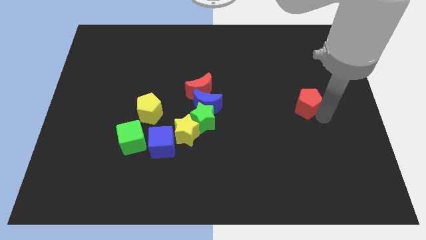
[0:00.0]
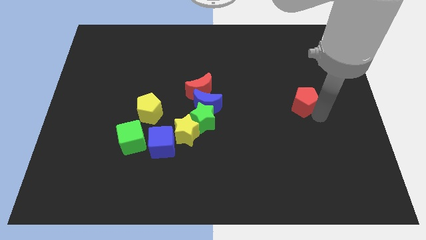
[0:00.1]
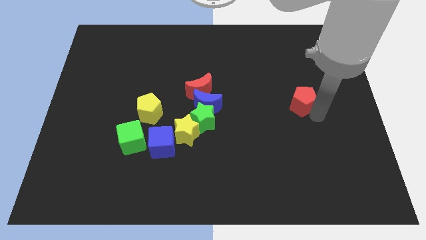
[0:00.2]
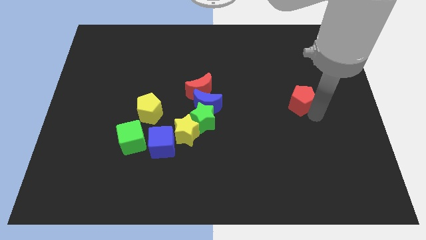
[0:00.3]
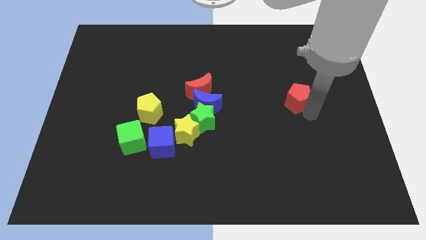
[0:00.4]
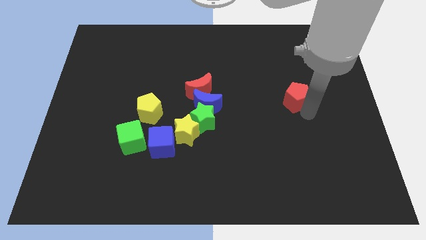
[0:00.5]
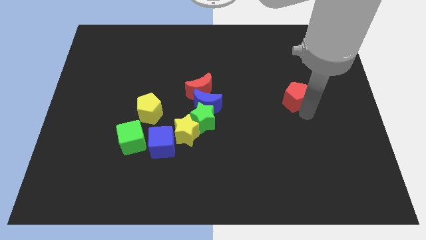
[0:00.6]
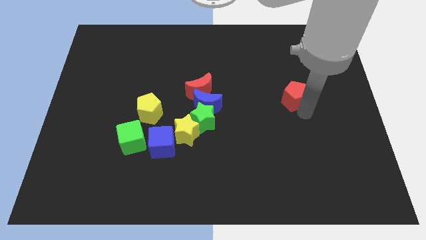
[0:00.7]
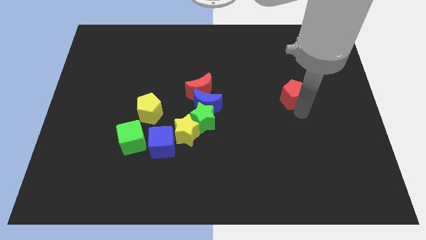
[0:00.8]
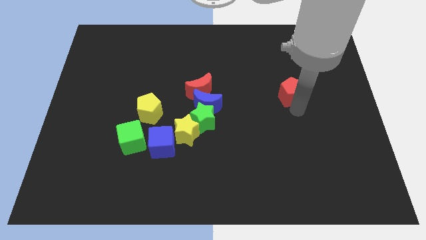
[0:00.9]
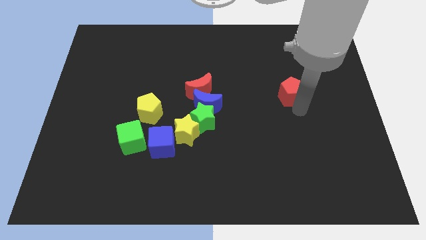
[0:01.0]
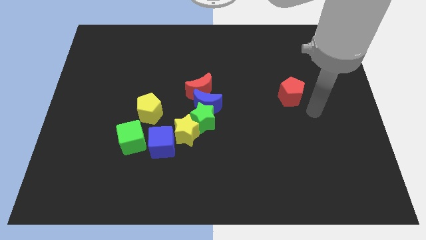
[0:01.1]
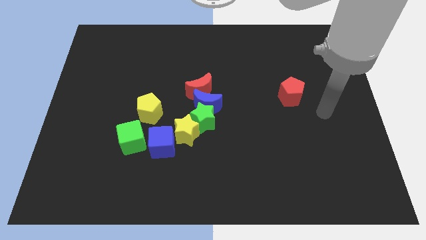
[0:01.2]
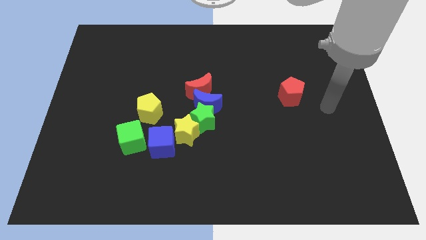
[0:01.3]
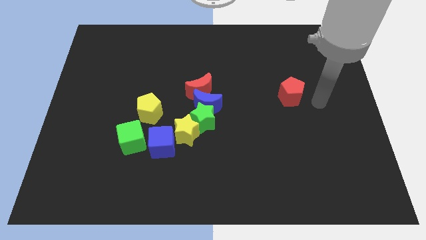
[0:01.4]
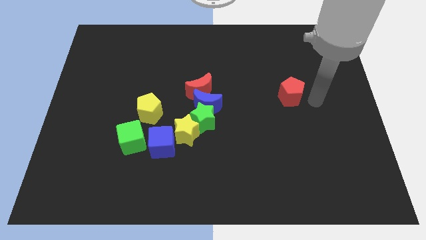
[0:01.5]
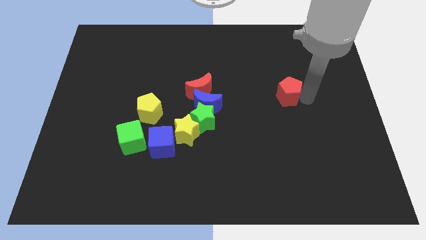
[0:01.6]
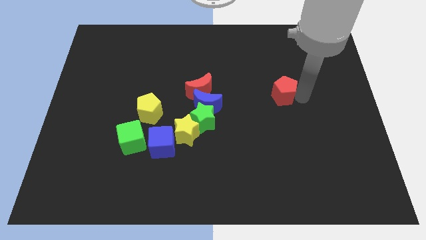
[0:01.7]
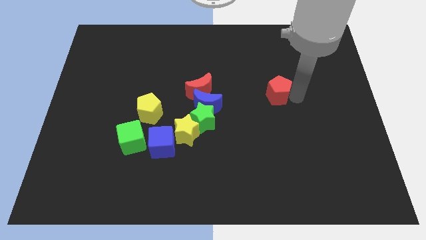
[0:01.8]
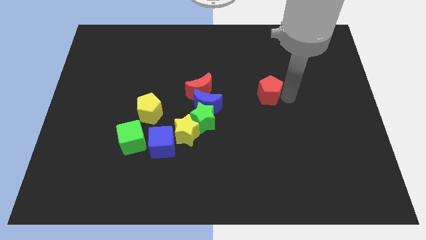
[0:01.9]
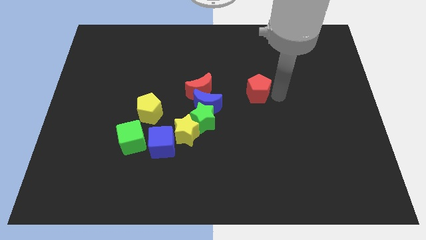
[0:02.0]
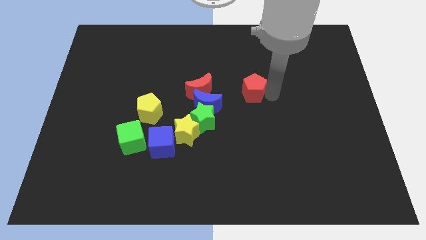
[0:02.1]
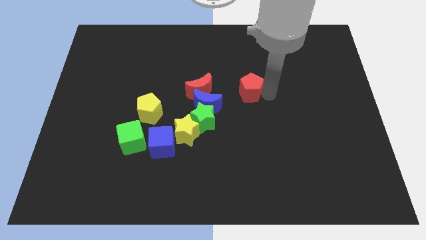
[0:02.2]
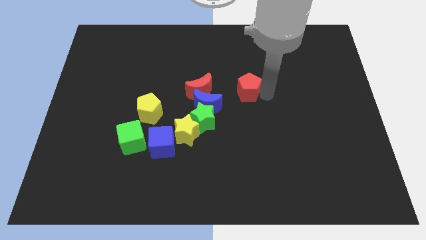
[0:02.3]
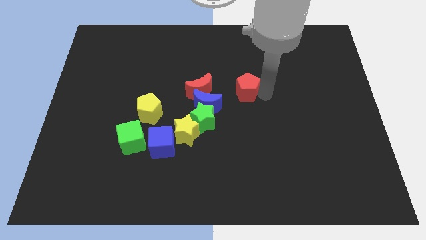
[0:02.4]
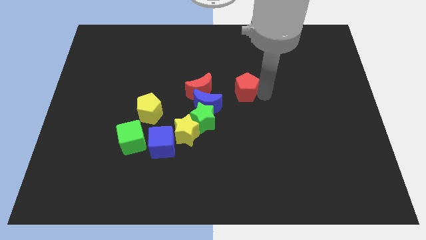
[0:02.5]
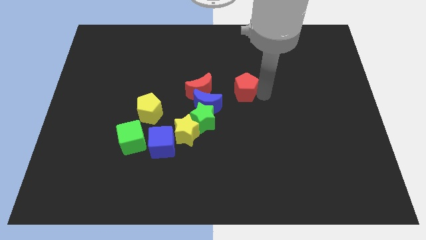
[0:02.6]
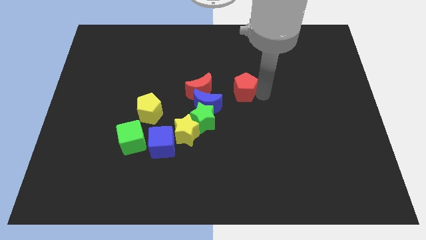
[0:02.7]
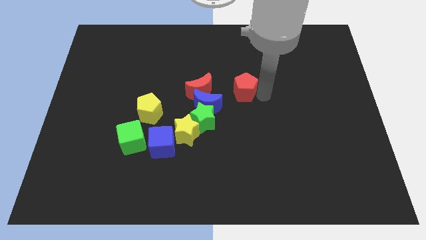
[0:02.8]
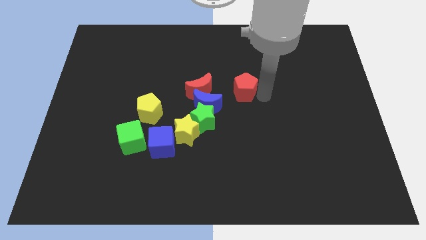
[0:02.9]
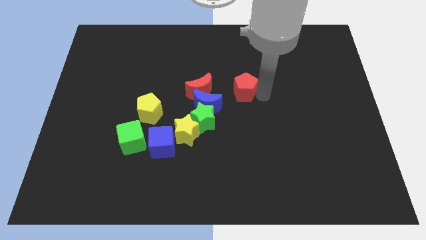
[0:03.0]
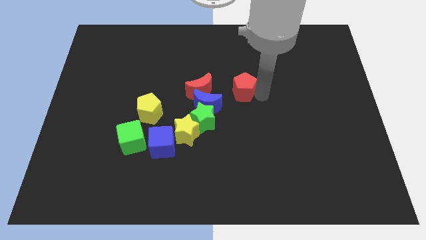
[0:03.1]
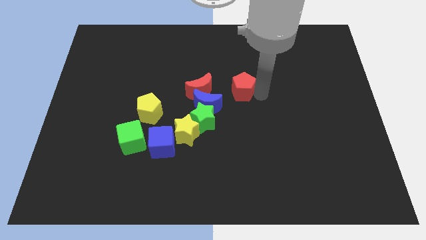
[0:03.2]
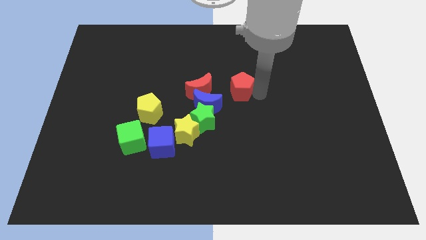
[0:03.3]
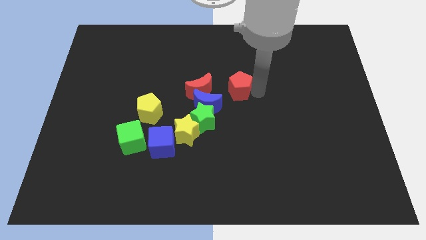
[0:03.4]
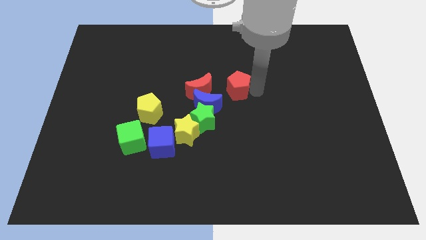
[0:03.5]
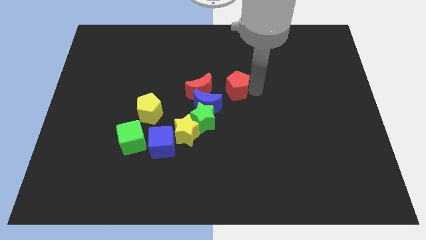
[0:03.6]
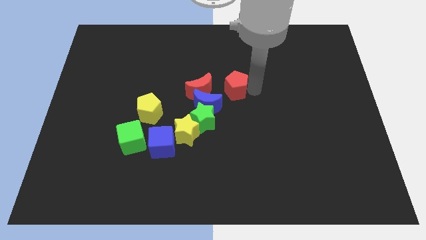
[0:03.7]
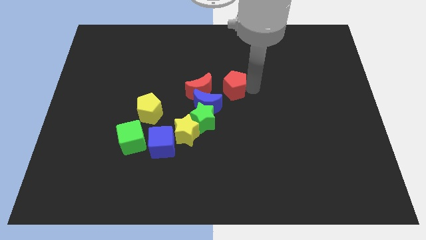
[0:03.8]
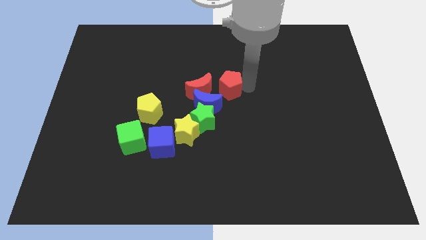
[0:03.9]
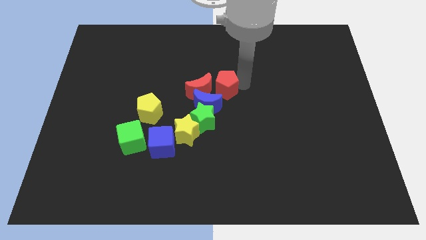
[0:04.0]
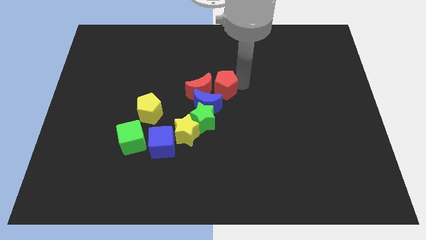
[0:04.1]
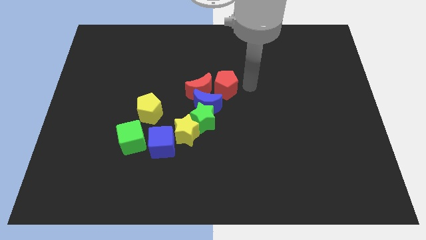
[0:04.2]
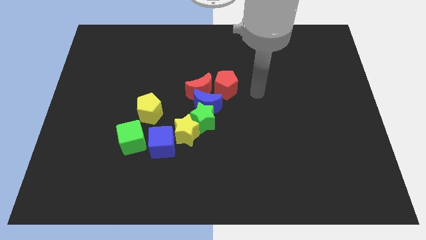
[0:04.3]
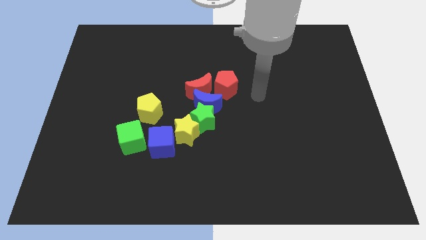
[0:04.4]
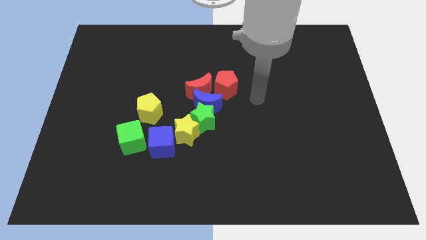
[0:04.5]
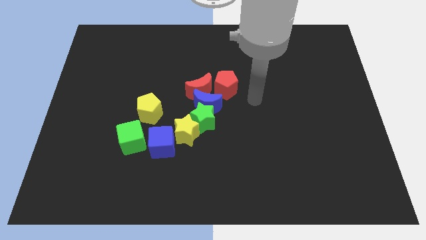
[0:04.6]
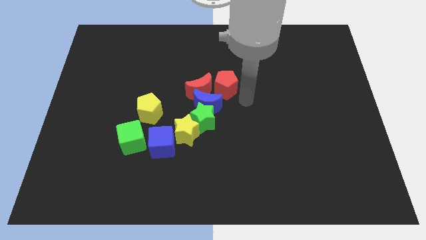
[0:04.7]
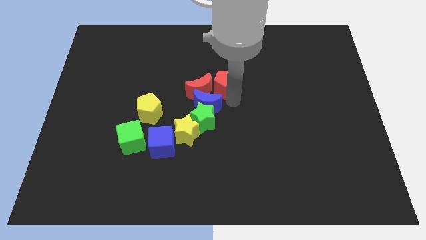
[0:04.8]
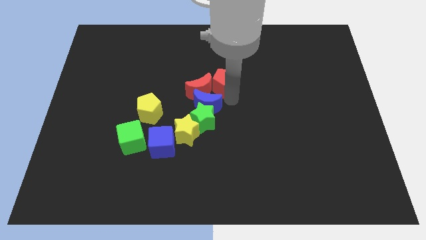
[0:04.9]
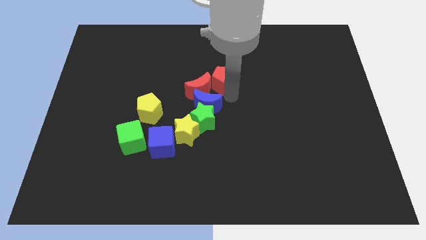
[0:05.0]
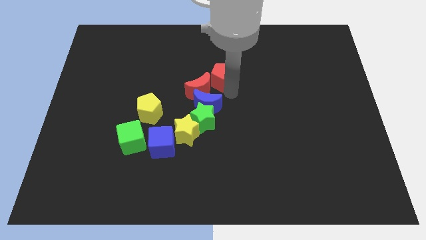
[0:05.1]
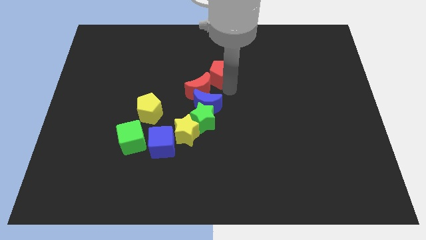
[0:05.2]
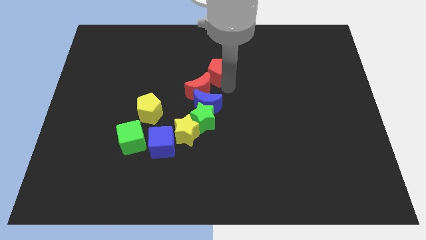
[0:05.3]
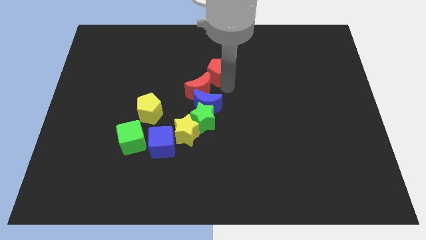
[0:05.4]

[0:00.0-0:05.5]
move the red pentagon into the red moon

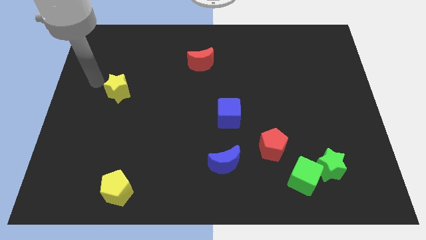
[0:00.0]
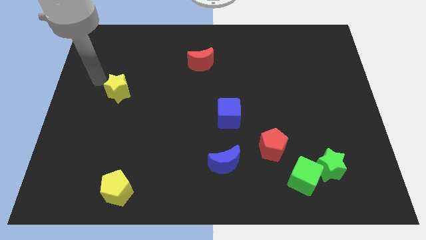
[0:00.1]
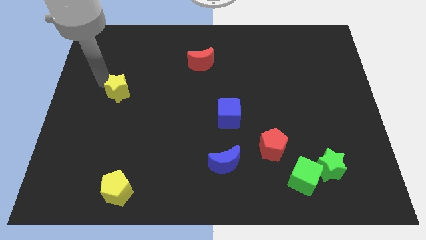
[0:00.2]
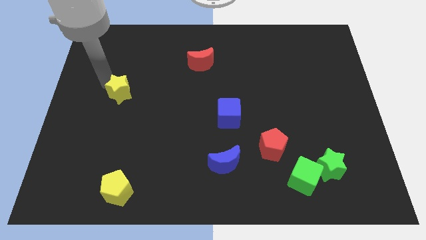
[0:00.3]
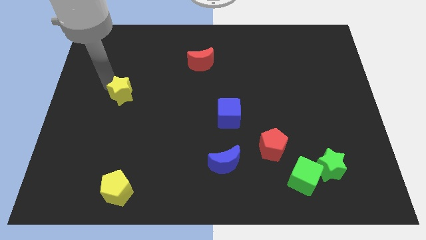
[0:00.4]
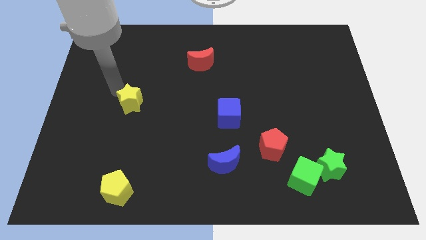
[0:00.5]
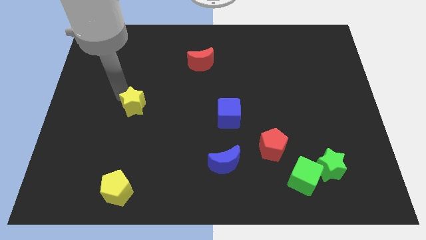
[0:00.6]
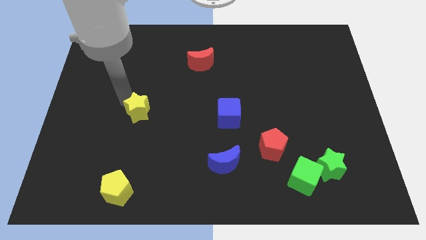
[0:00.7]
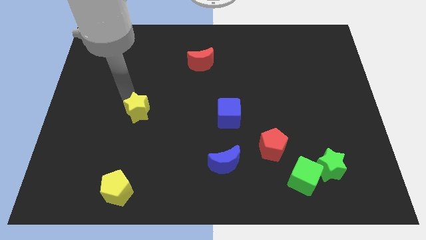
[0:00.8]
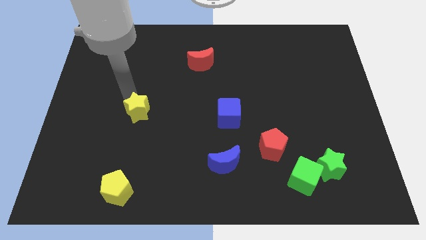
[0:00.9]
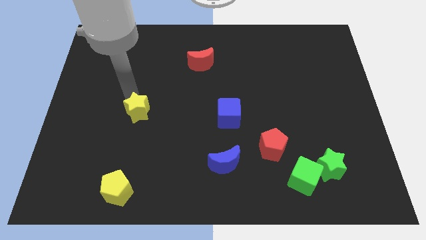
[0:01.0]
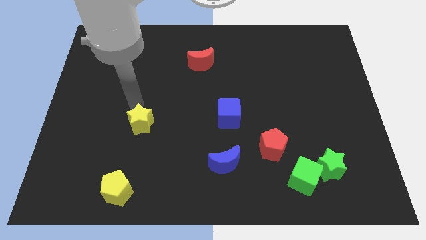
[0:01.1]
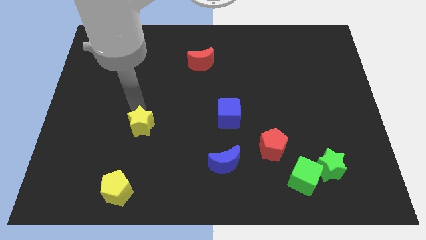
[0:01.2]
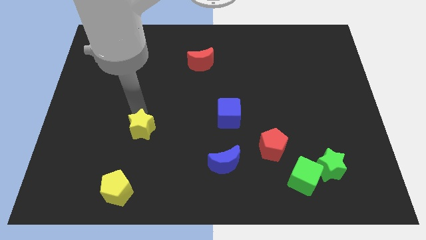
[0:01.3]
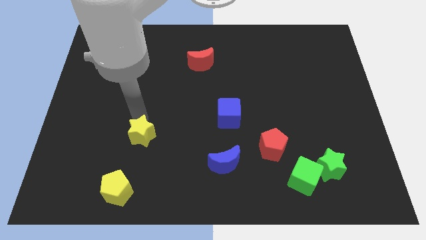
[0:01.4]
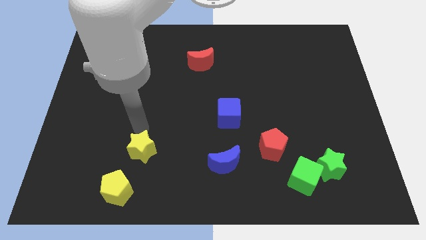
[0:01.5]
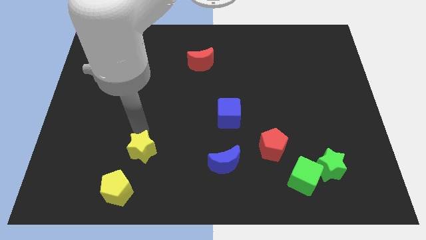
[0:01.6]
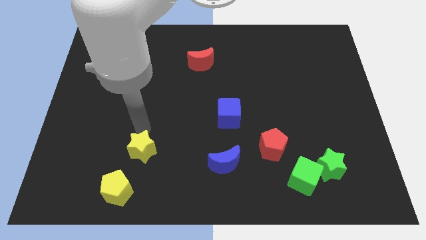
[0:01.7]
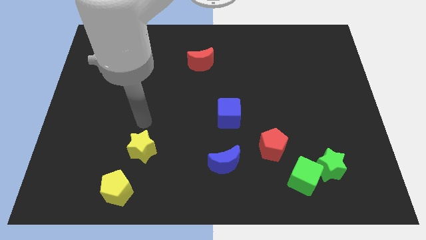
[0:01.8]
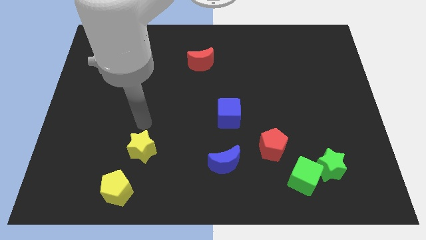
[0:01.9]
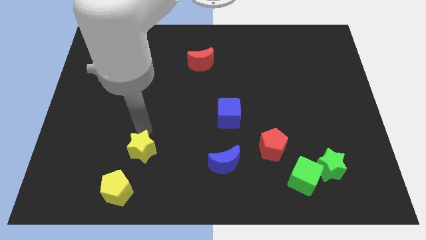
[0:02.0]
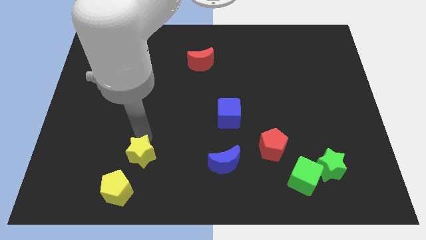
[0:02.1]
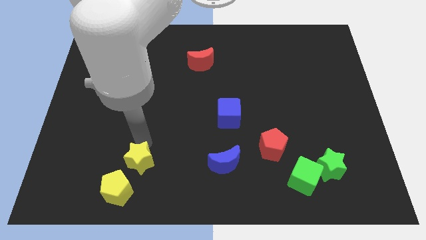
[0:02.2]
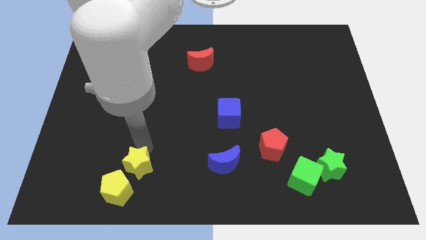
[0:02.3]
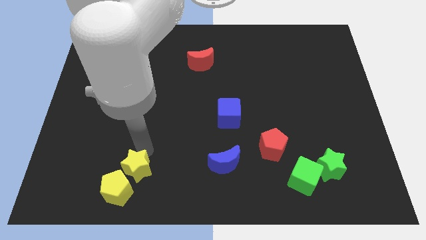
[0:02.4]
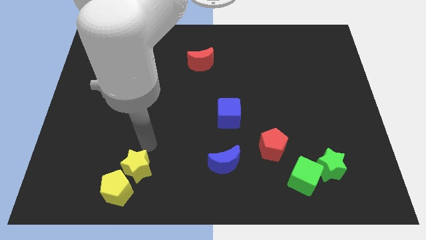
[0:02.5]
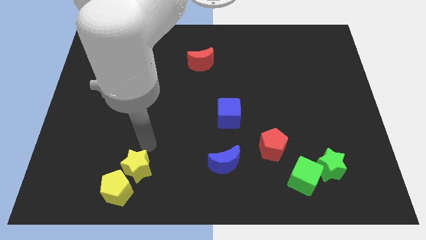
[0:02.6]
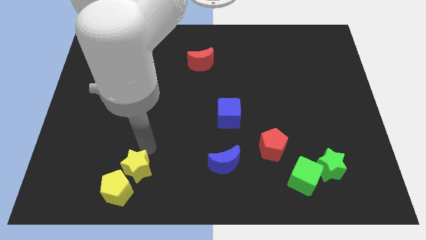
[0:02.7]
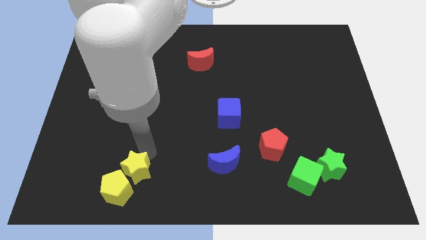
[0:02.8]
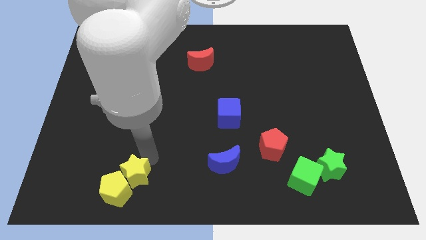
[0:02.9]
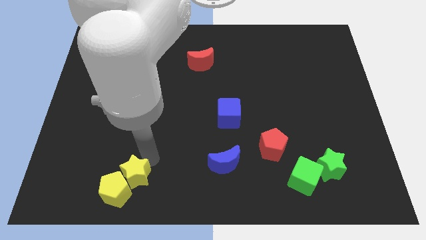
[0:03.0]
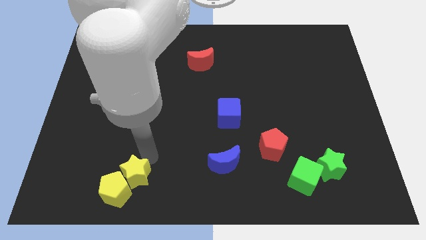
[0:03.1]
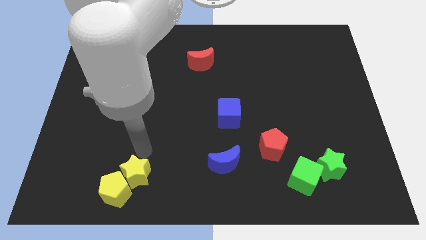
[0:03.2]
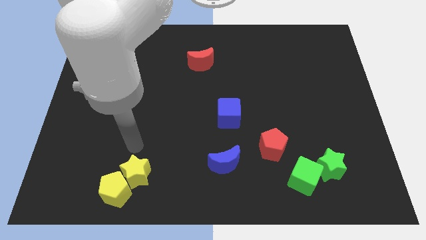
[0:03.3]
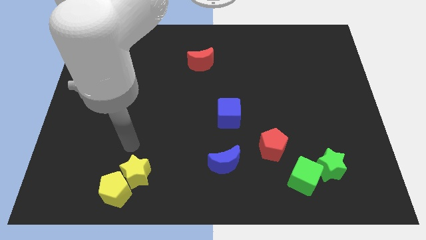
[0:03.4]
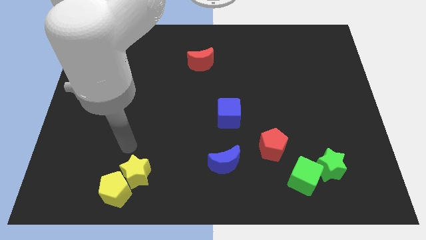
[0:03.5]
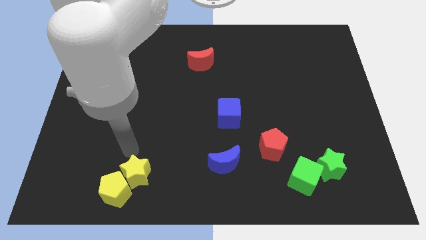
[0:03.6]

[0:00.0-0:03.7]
push the yellow star into the yellow pentagon
